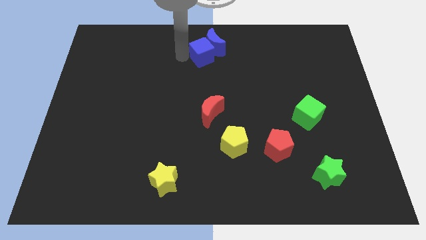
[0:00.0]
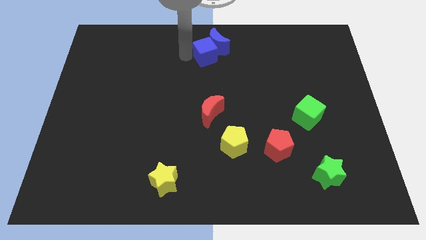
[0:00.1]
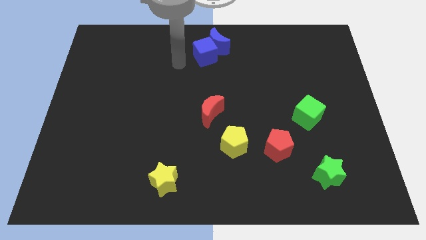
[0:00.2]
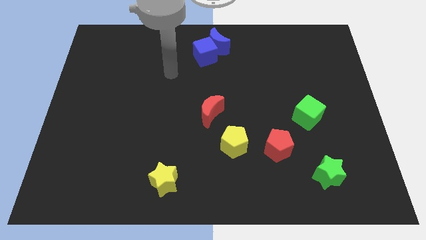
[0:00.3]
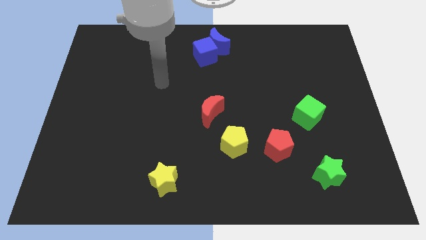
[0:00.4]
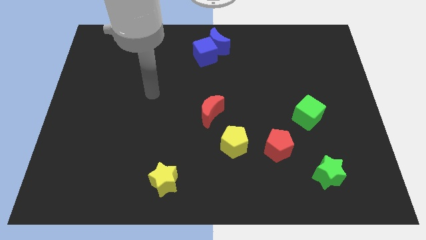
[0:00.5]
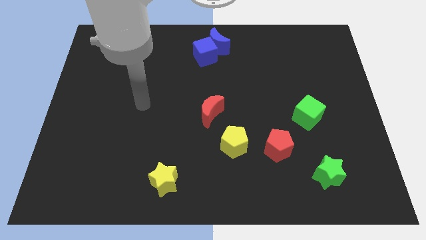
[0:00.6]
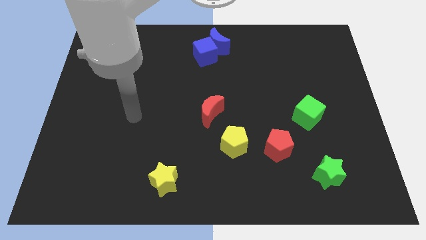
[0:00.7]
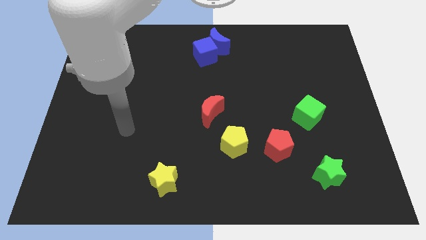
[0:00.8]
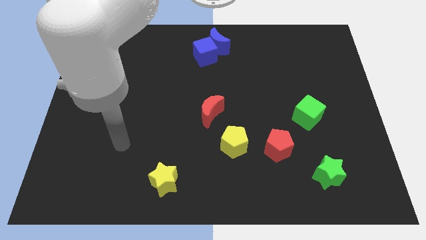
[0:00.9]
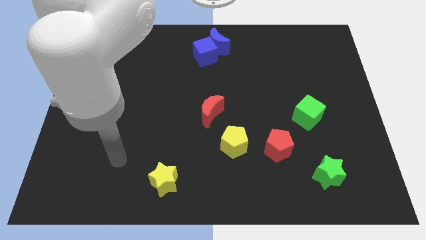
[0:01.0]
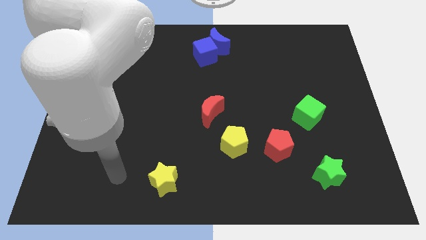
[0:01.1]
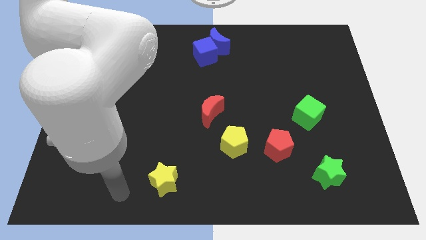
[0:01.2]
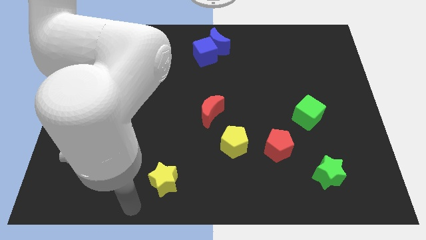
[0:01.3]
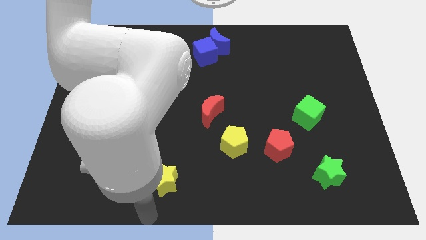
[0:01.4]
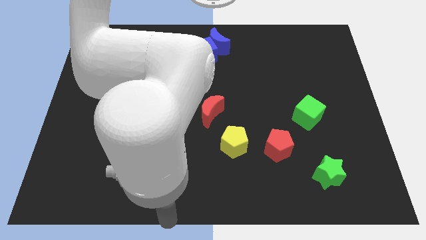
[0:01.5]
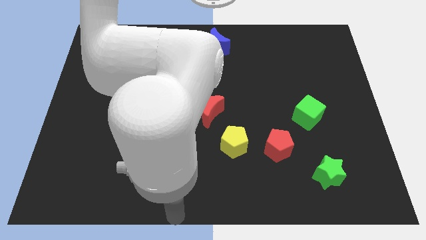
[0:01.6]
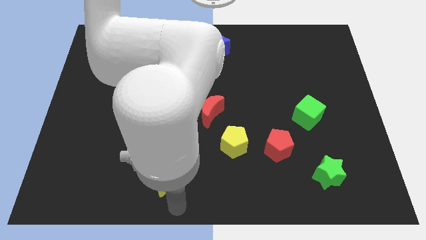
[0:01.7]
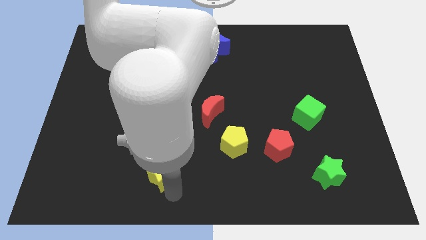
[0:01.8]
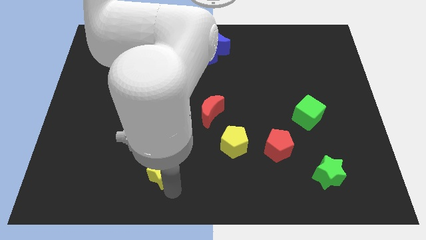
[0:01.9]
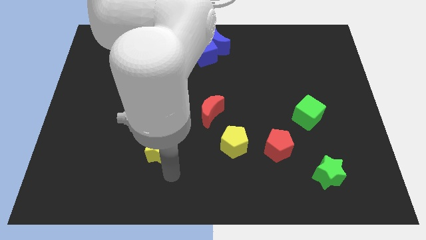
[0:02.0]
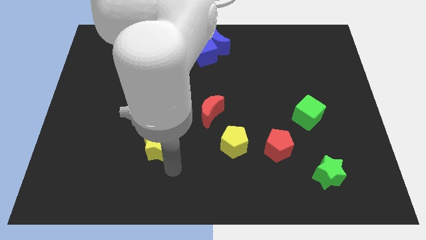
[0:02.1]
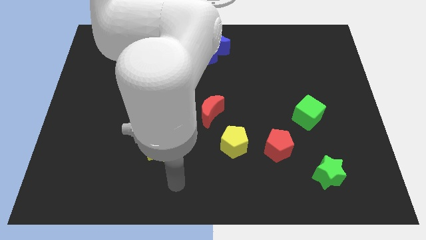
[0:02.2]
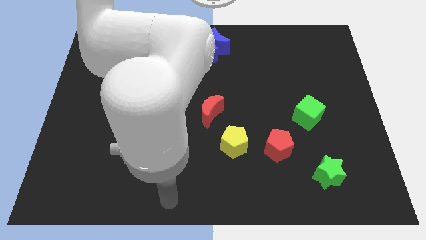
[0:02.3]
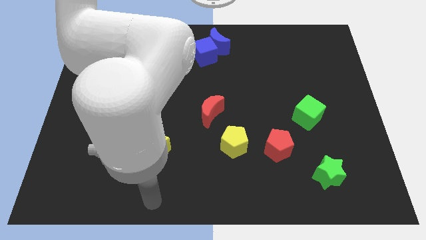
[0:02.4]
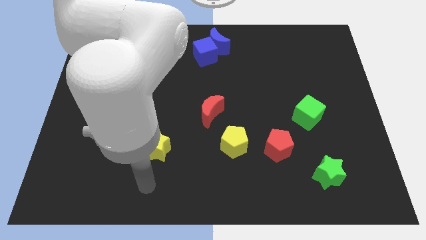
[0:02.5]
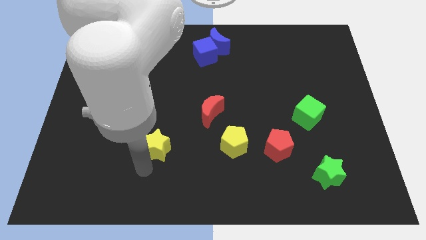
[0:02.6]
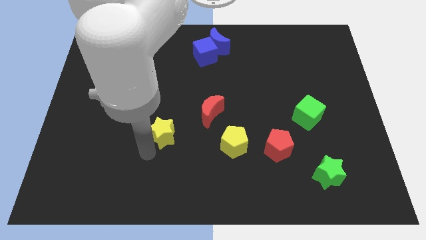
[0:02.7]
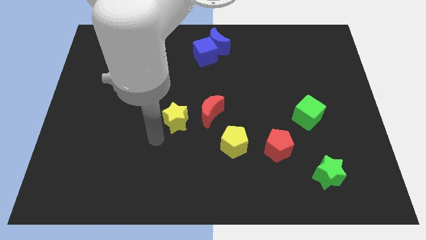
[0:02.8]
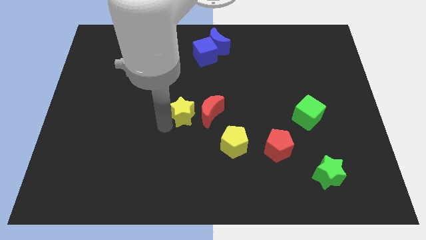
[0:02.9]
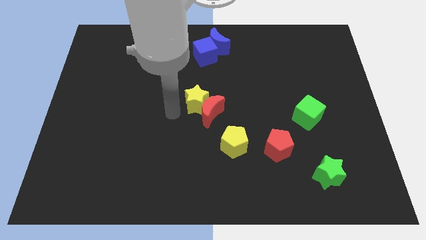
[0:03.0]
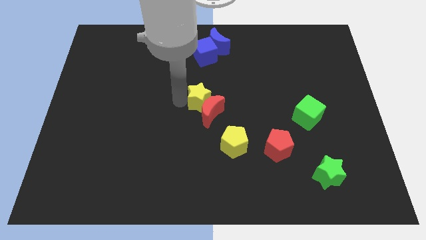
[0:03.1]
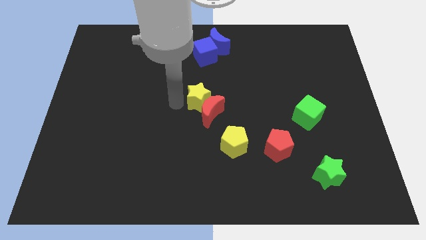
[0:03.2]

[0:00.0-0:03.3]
place the yellow star left top to the red crescent

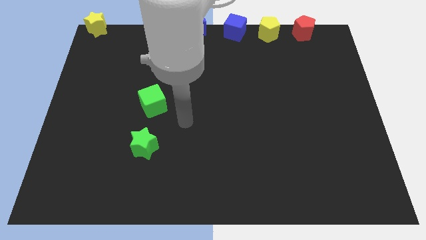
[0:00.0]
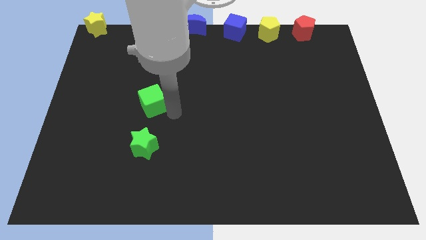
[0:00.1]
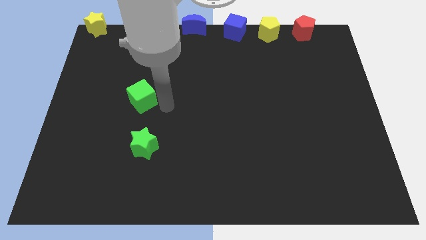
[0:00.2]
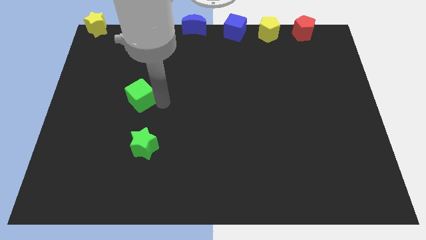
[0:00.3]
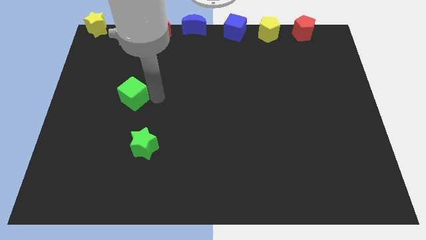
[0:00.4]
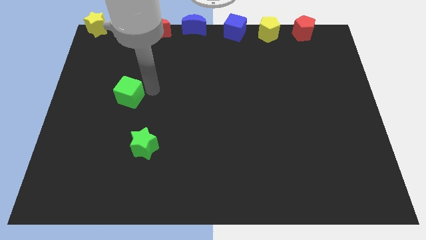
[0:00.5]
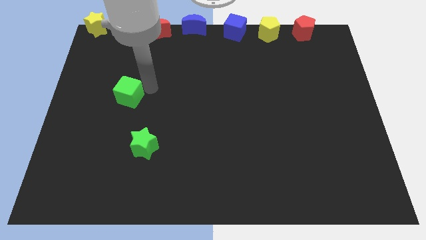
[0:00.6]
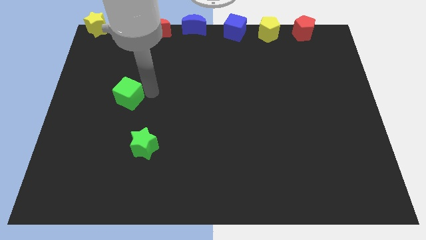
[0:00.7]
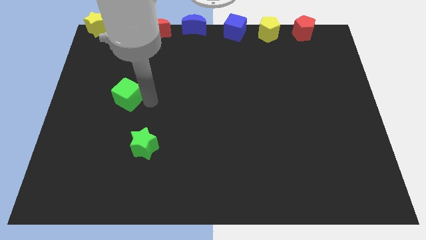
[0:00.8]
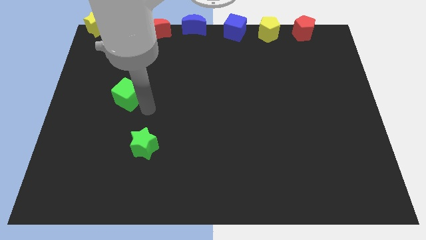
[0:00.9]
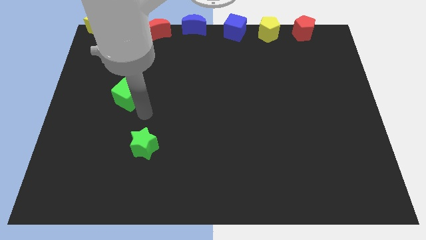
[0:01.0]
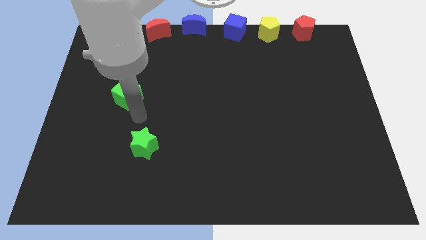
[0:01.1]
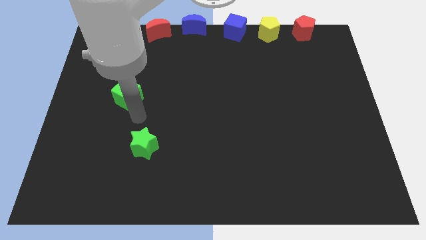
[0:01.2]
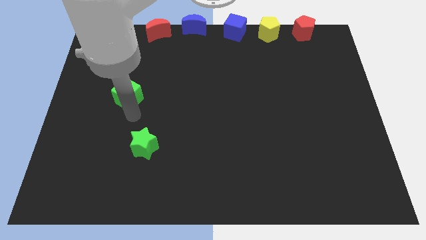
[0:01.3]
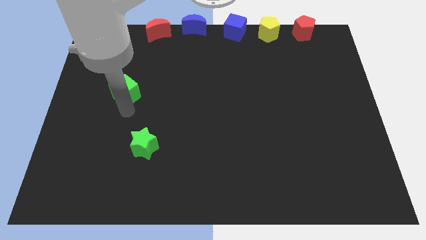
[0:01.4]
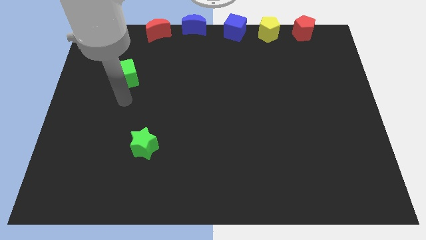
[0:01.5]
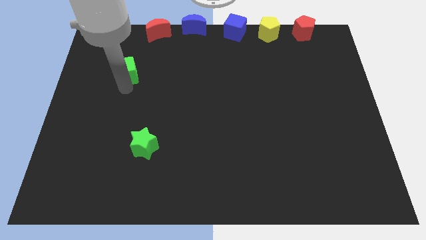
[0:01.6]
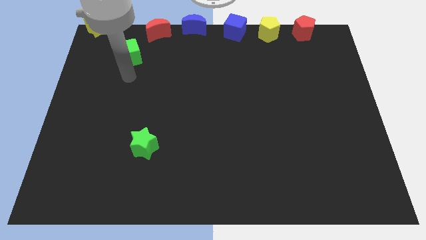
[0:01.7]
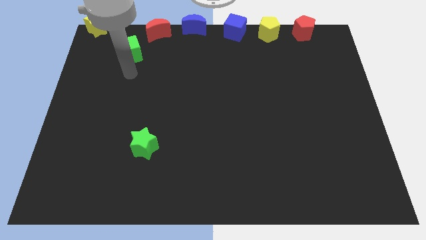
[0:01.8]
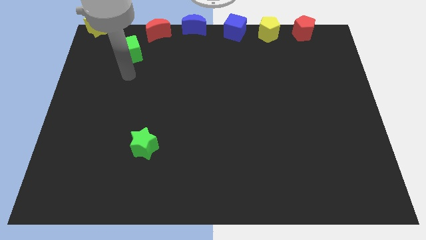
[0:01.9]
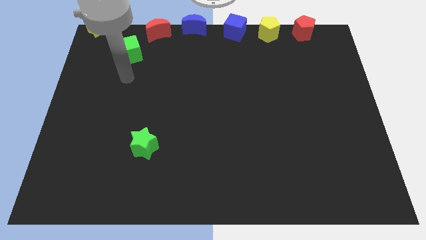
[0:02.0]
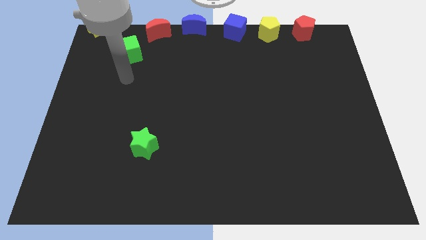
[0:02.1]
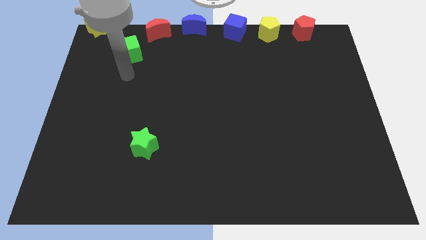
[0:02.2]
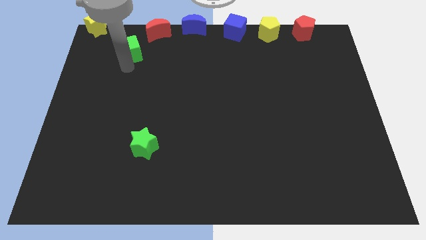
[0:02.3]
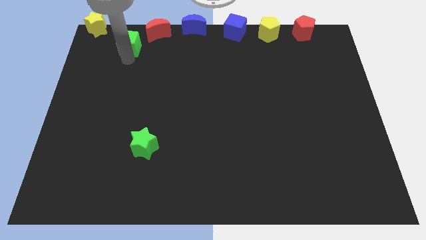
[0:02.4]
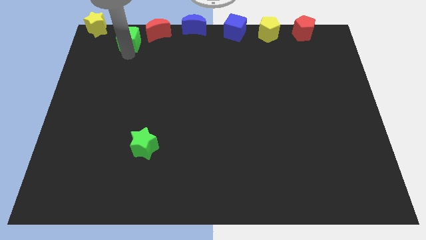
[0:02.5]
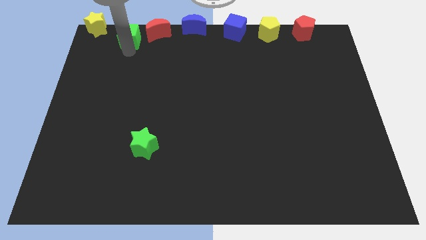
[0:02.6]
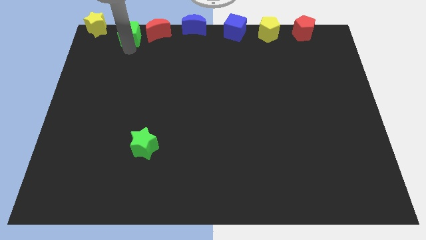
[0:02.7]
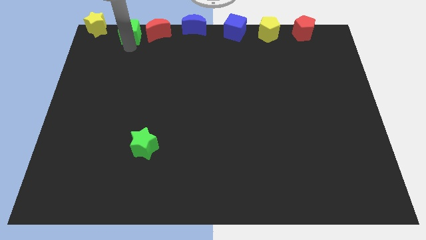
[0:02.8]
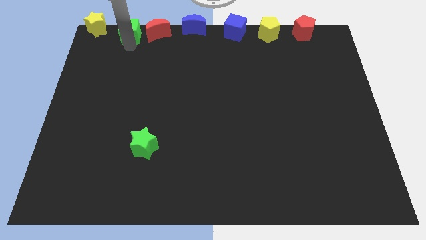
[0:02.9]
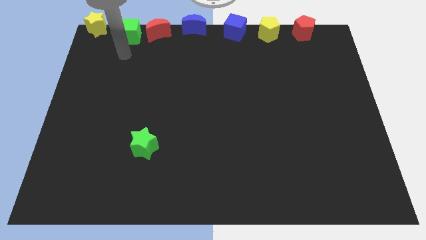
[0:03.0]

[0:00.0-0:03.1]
place green cube beside red crescent

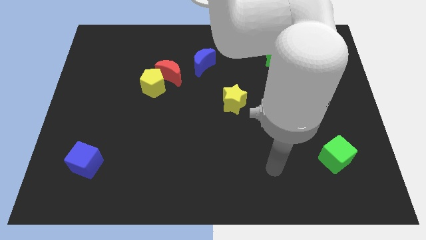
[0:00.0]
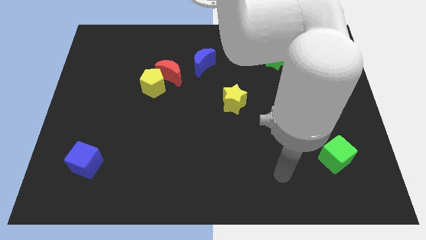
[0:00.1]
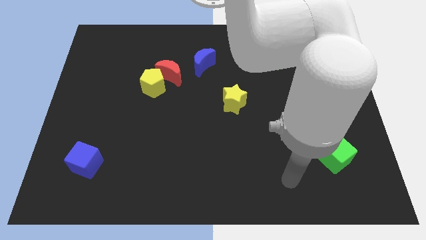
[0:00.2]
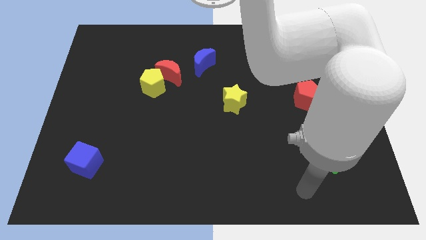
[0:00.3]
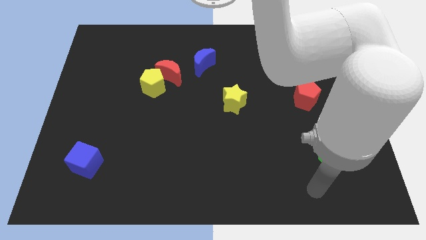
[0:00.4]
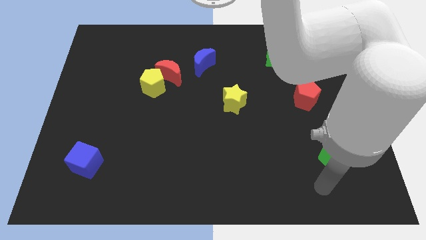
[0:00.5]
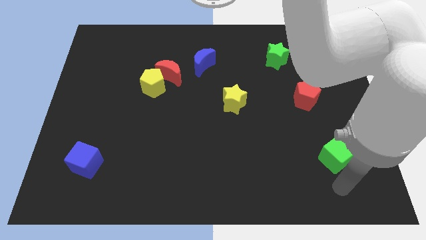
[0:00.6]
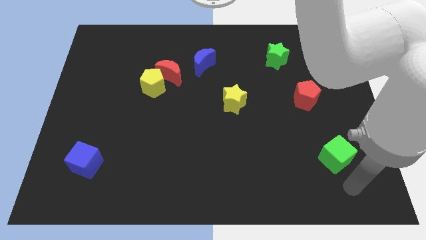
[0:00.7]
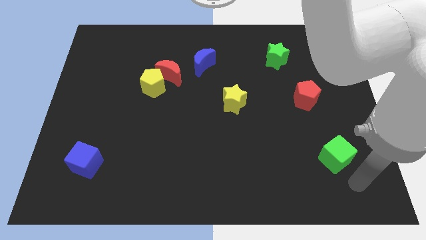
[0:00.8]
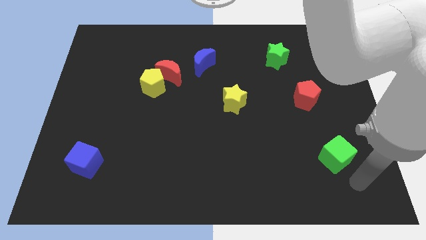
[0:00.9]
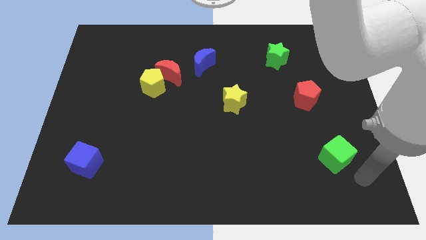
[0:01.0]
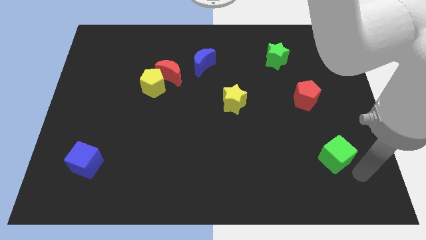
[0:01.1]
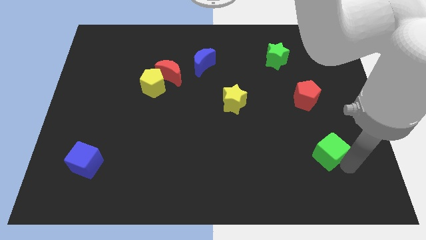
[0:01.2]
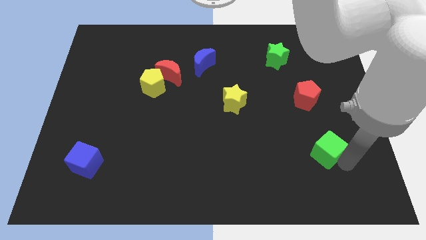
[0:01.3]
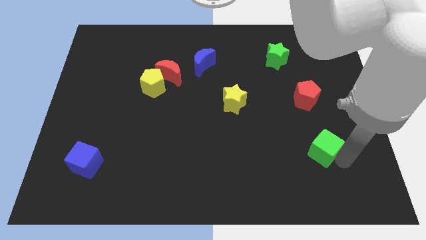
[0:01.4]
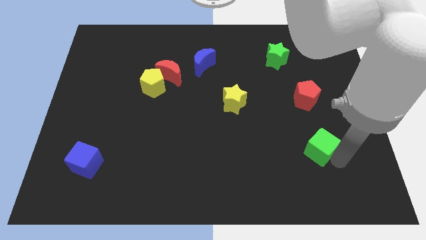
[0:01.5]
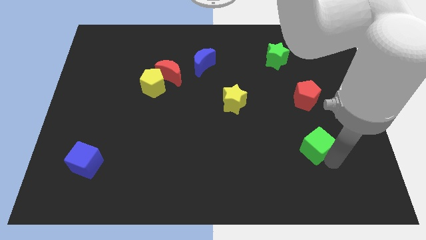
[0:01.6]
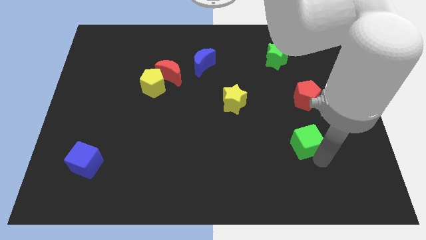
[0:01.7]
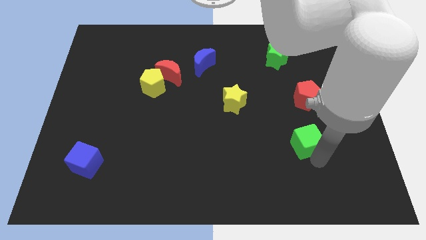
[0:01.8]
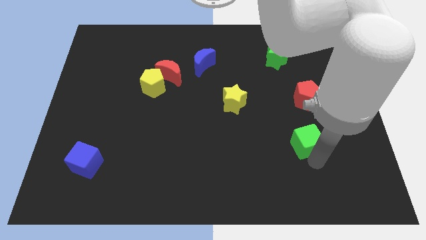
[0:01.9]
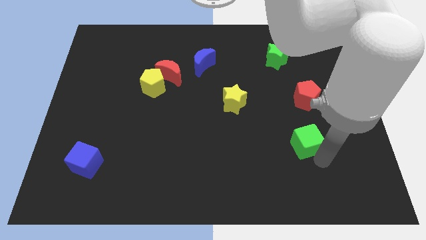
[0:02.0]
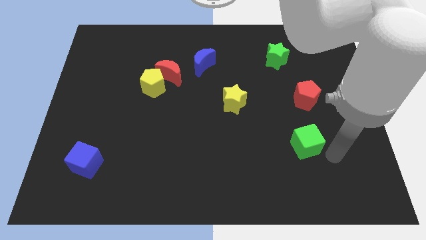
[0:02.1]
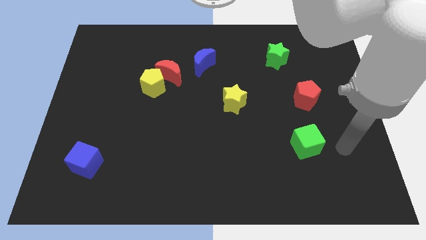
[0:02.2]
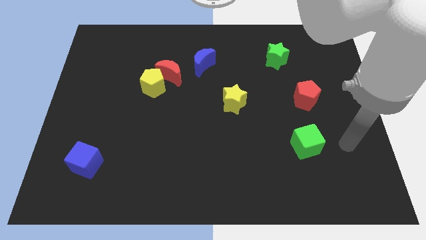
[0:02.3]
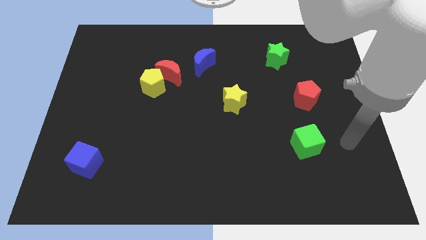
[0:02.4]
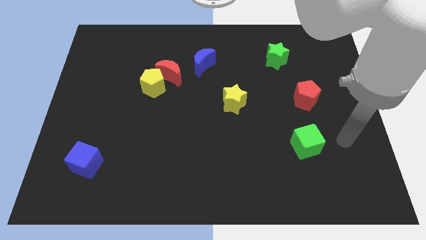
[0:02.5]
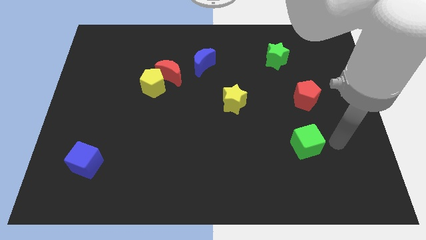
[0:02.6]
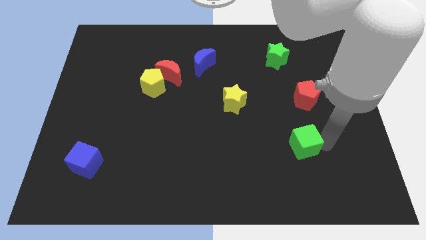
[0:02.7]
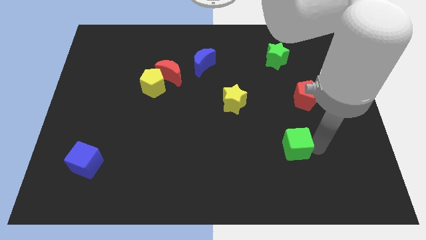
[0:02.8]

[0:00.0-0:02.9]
place the green cube below the red pentagon
